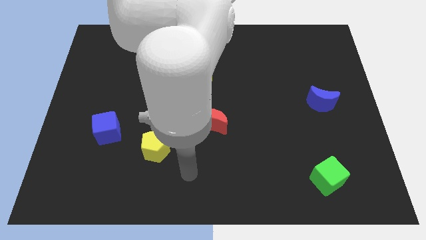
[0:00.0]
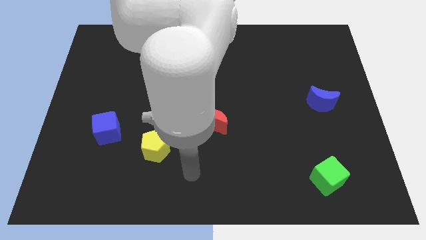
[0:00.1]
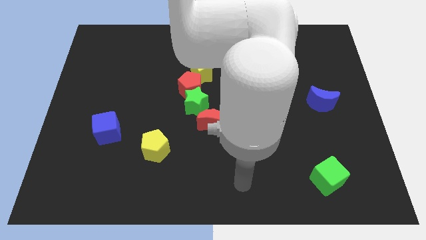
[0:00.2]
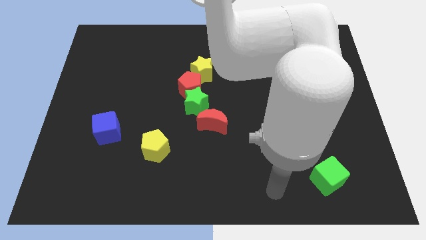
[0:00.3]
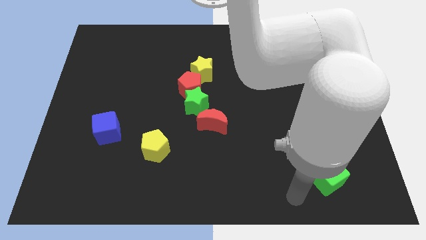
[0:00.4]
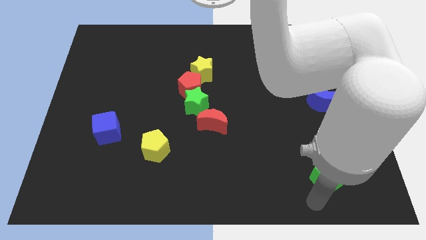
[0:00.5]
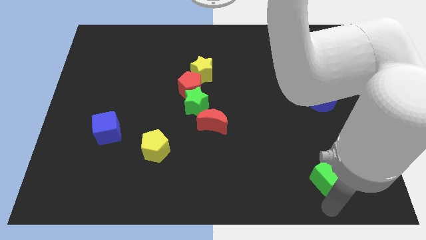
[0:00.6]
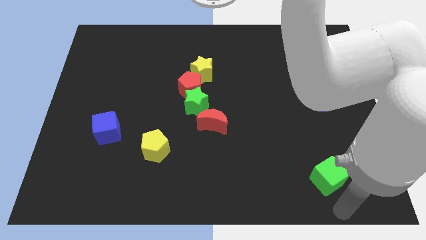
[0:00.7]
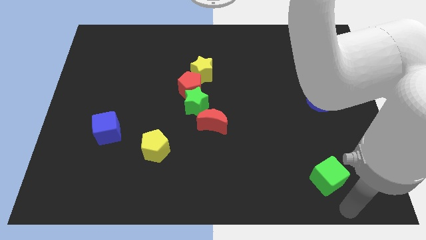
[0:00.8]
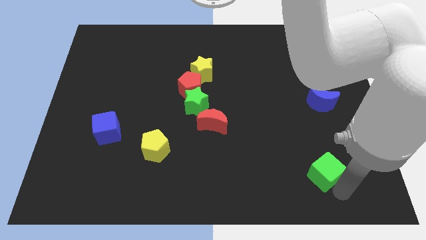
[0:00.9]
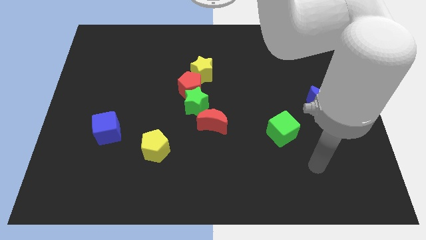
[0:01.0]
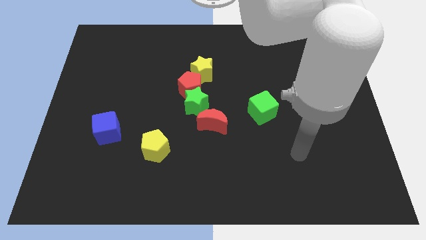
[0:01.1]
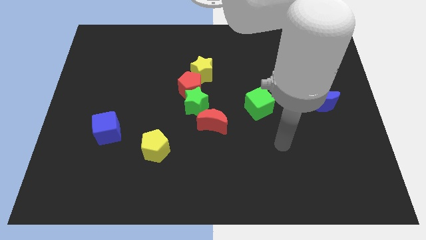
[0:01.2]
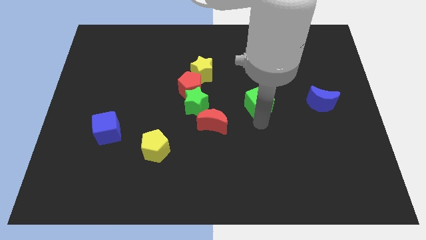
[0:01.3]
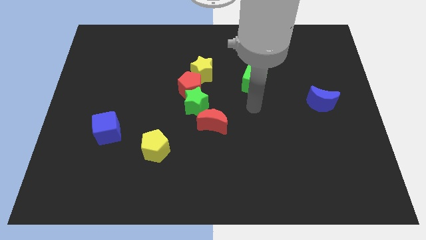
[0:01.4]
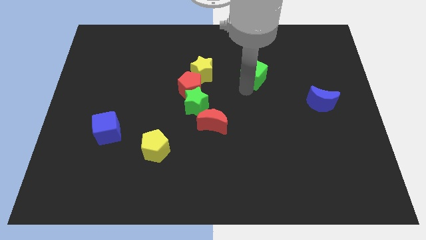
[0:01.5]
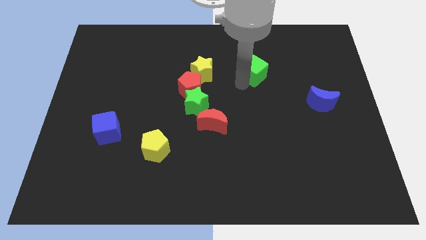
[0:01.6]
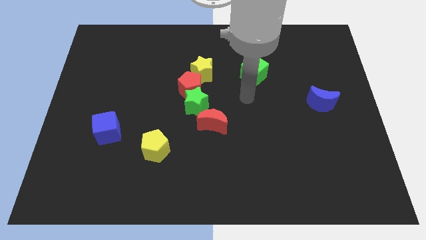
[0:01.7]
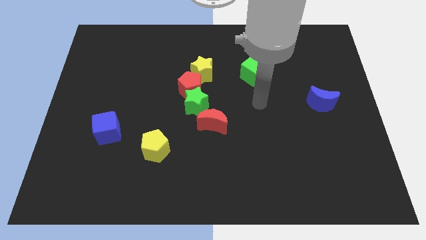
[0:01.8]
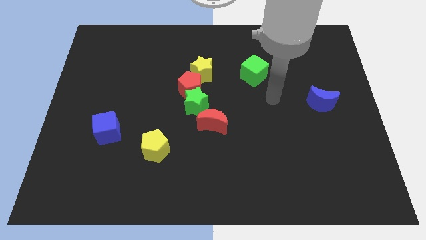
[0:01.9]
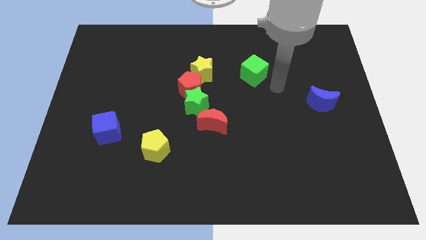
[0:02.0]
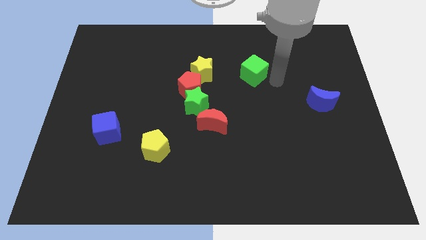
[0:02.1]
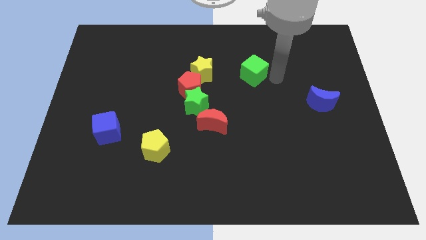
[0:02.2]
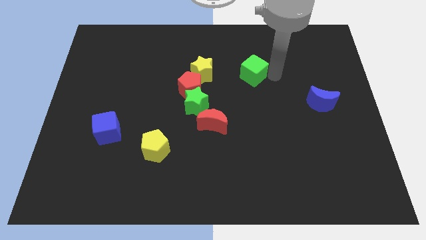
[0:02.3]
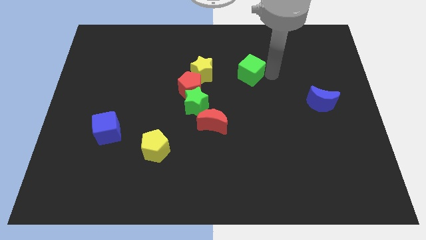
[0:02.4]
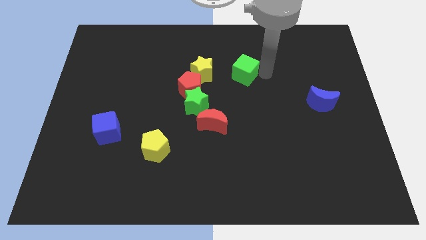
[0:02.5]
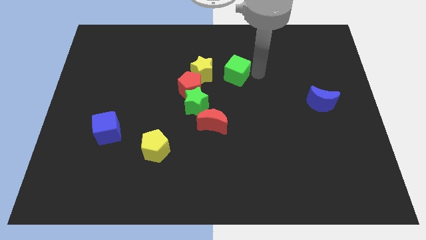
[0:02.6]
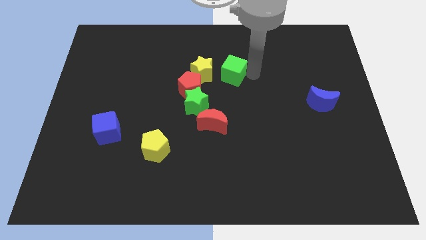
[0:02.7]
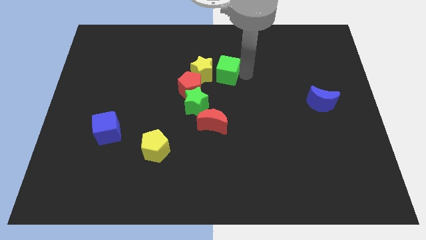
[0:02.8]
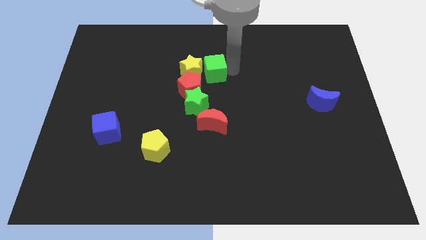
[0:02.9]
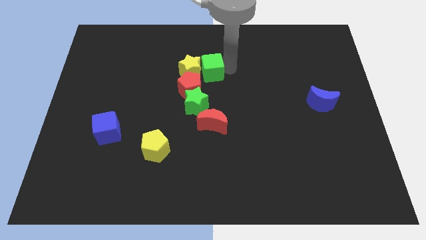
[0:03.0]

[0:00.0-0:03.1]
push the green cube next to the yellow star

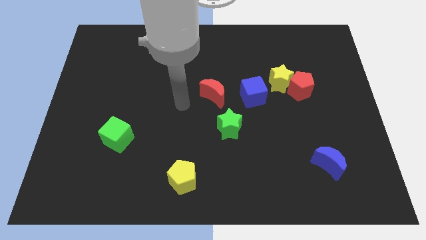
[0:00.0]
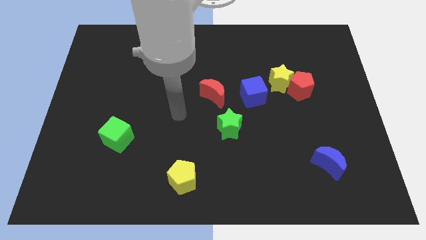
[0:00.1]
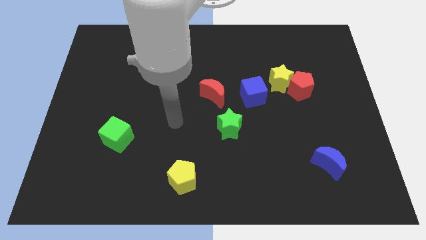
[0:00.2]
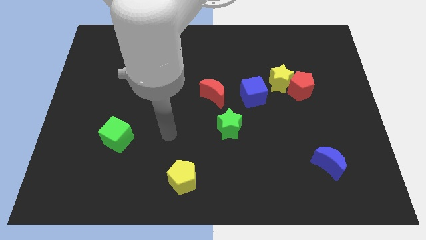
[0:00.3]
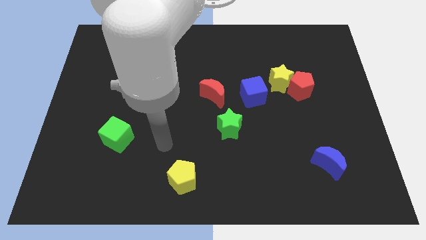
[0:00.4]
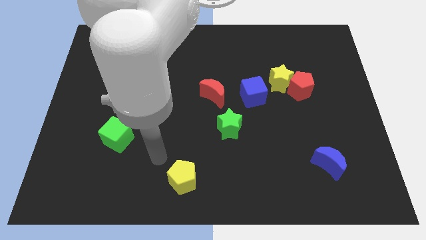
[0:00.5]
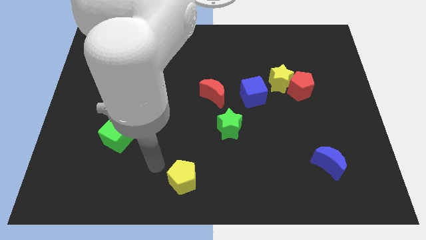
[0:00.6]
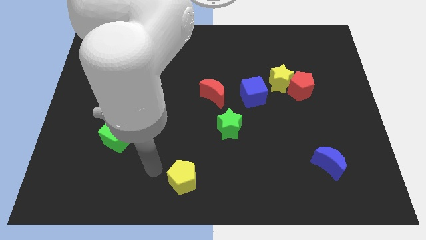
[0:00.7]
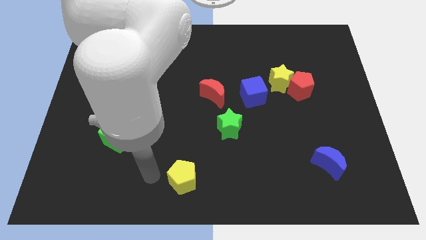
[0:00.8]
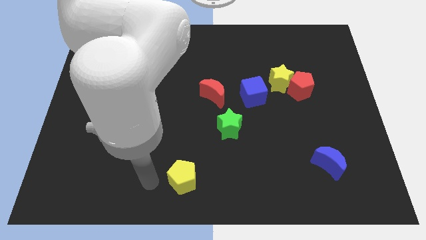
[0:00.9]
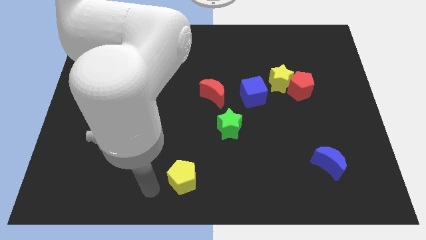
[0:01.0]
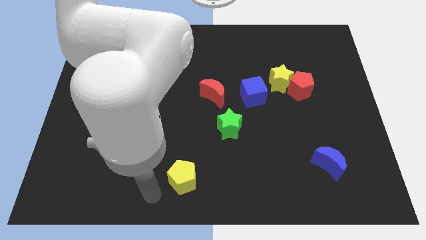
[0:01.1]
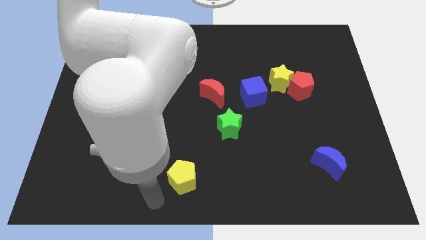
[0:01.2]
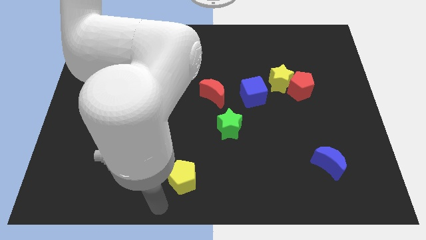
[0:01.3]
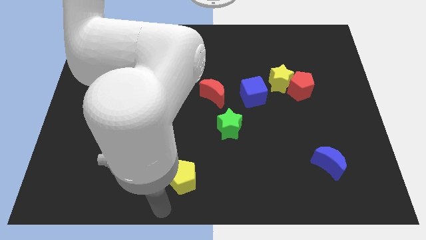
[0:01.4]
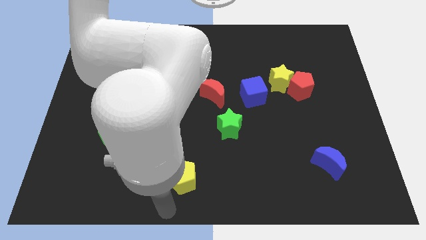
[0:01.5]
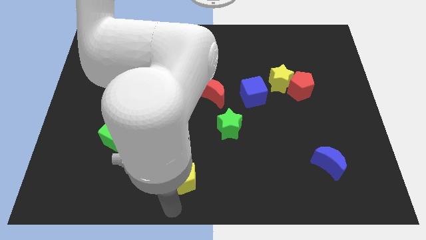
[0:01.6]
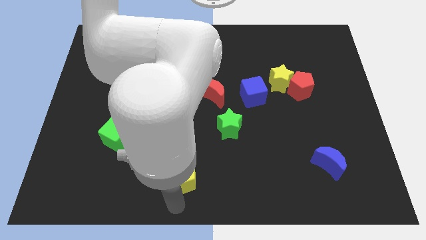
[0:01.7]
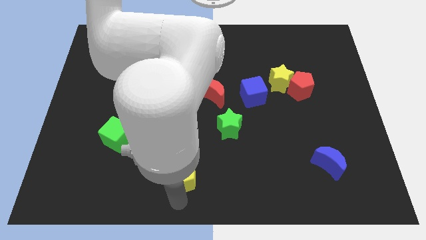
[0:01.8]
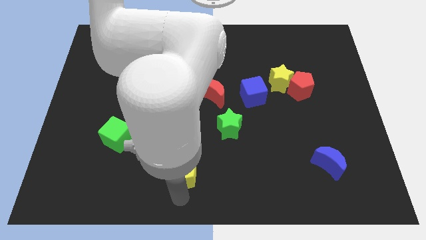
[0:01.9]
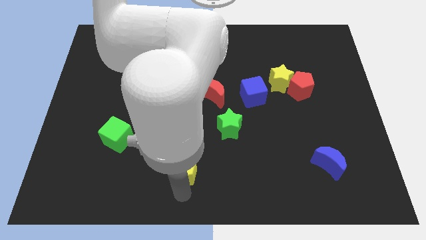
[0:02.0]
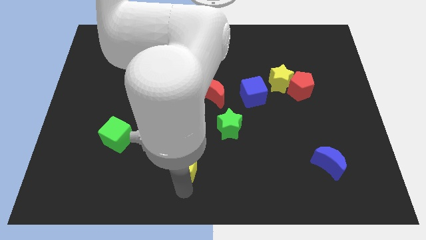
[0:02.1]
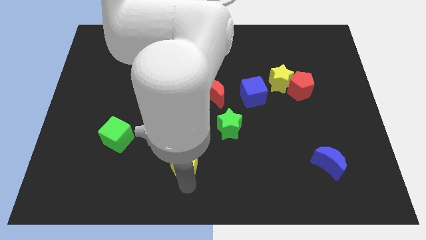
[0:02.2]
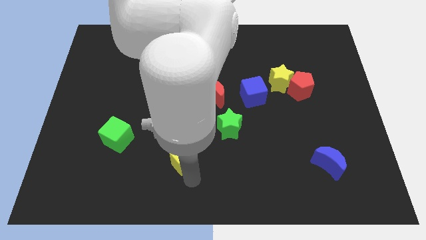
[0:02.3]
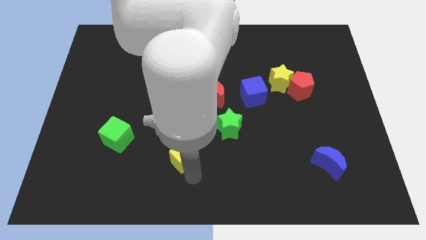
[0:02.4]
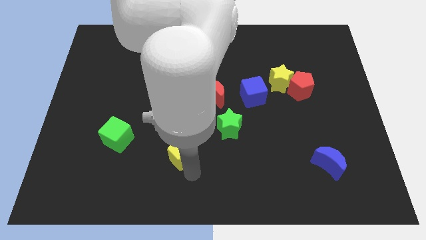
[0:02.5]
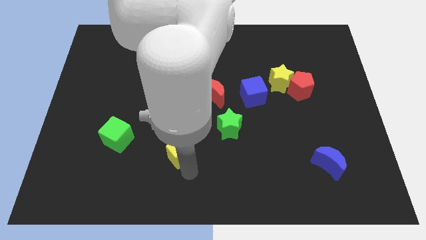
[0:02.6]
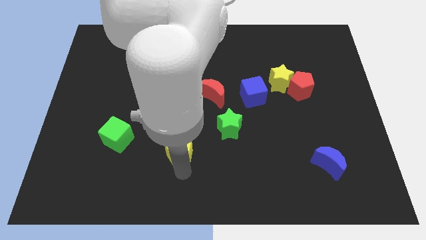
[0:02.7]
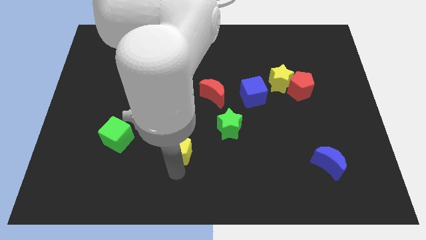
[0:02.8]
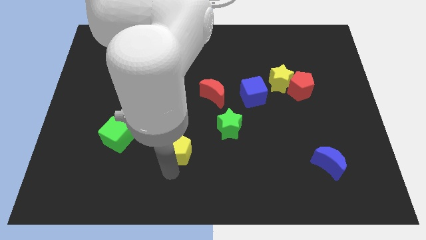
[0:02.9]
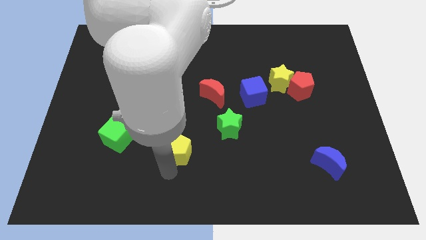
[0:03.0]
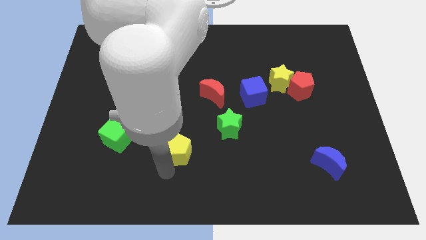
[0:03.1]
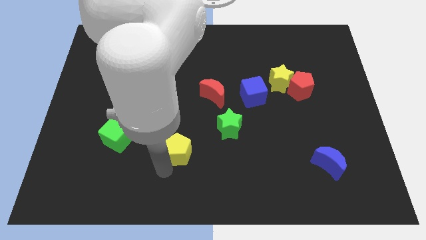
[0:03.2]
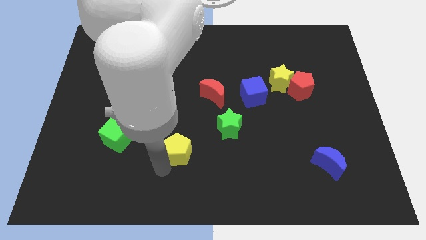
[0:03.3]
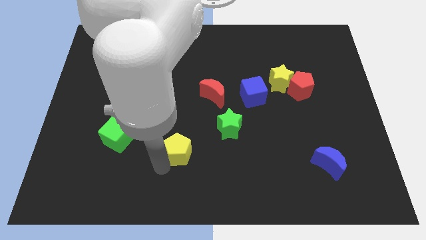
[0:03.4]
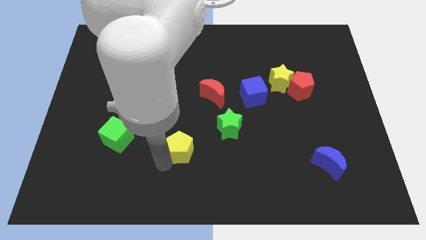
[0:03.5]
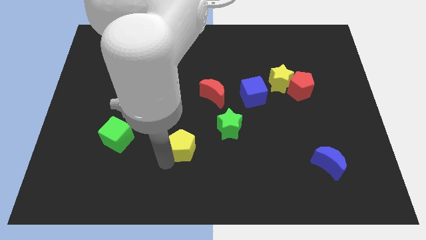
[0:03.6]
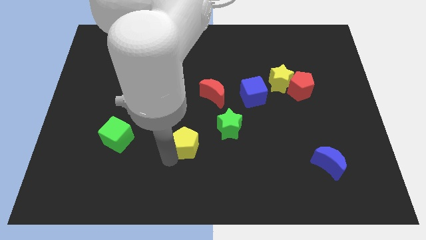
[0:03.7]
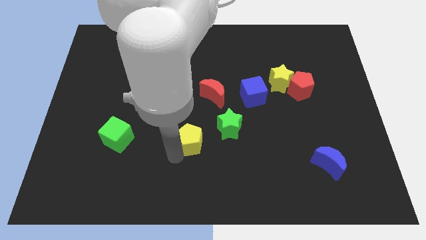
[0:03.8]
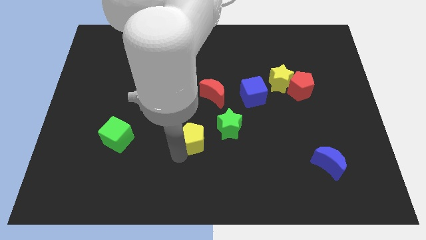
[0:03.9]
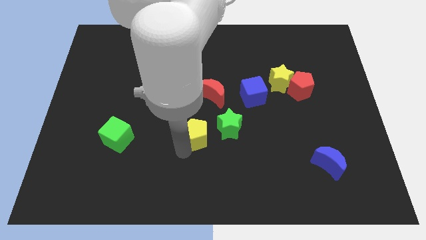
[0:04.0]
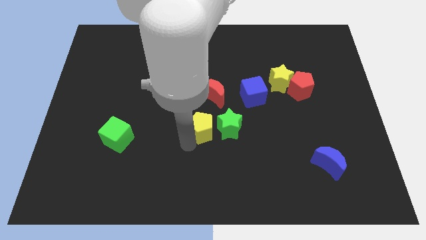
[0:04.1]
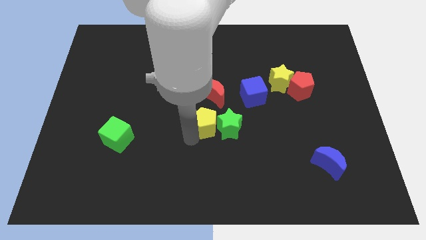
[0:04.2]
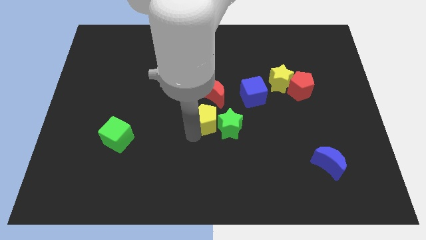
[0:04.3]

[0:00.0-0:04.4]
put the yellow pentagon next to the green star

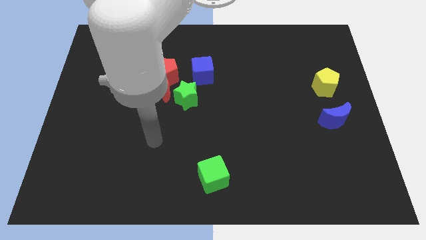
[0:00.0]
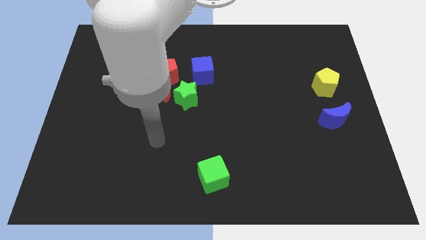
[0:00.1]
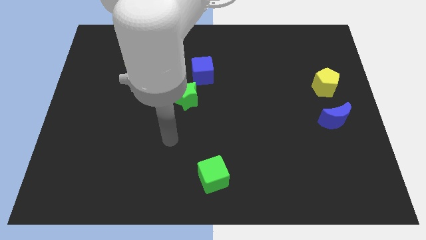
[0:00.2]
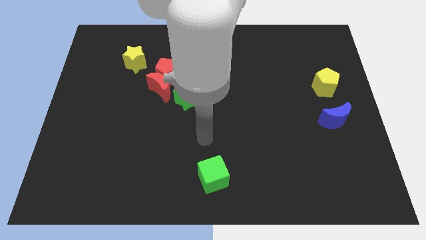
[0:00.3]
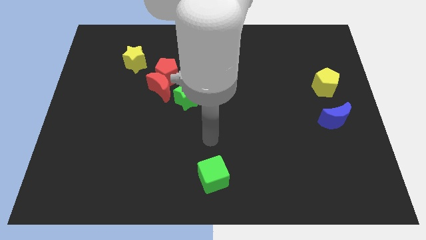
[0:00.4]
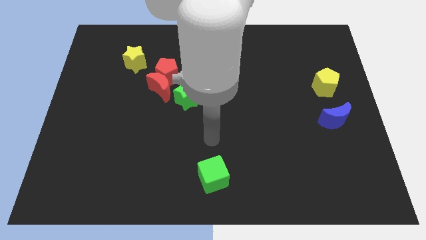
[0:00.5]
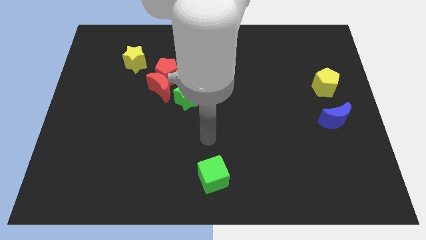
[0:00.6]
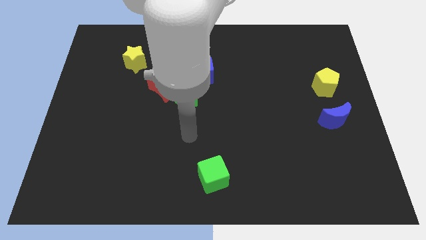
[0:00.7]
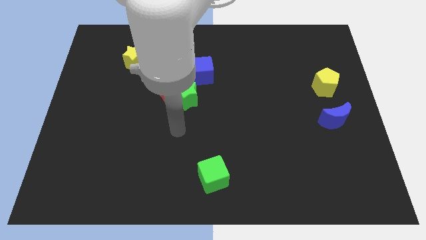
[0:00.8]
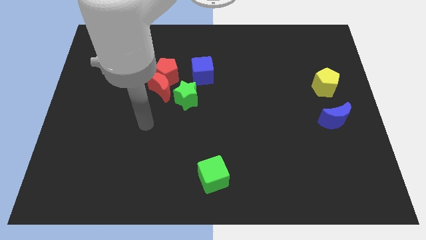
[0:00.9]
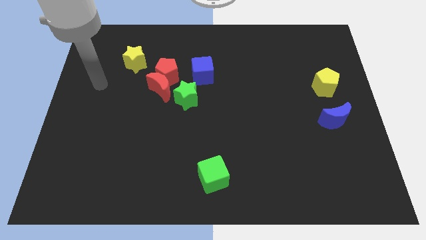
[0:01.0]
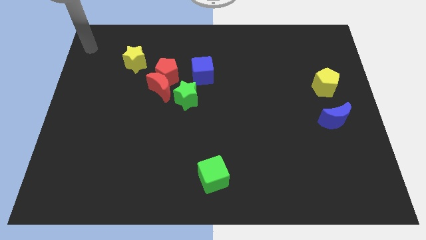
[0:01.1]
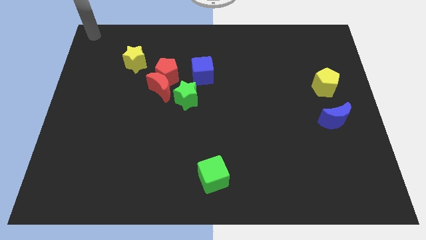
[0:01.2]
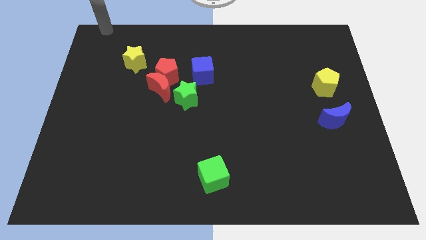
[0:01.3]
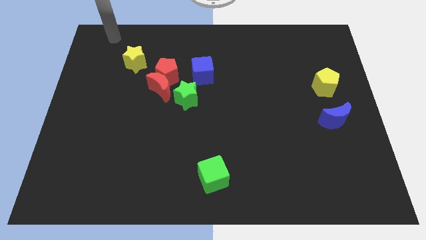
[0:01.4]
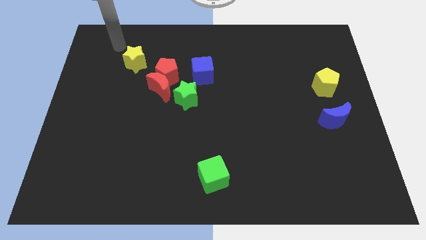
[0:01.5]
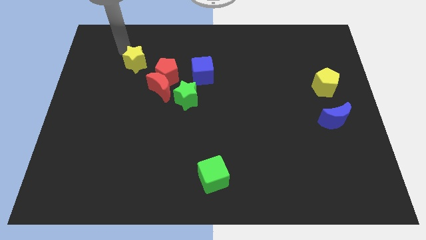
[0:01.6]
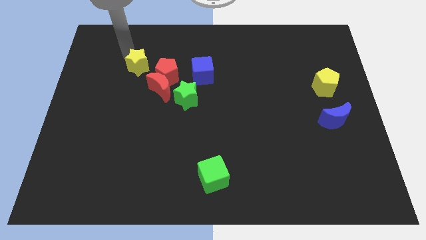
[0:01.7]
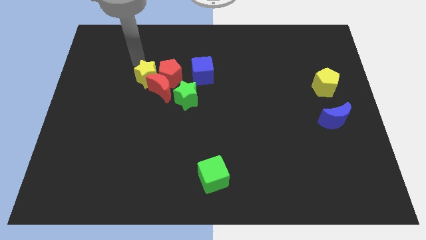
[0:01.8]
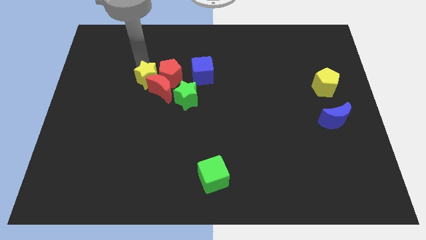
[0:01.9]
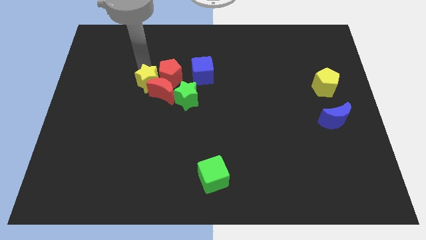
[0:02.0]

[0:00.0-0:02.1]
put the yellow star to the red moon
